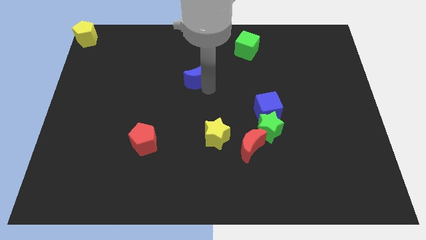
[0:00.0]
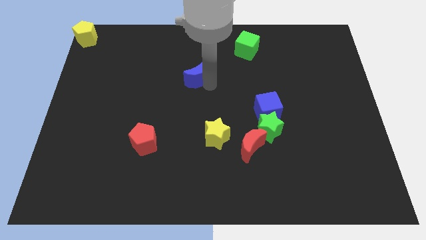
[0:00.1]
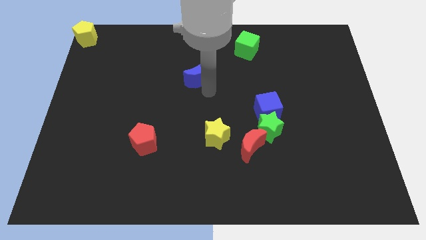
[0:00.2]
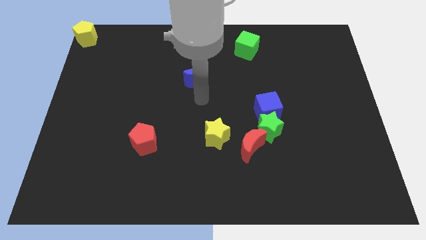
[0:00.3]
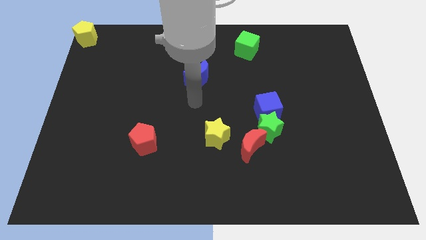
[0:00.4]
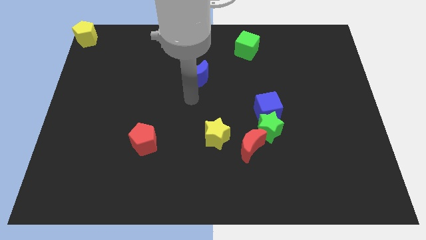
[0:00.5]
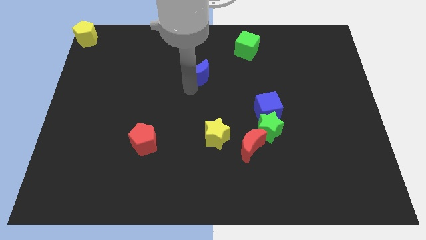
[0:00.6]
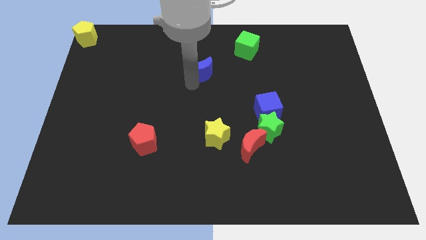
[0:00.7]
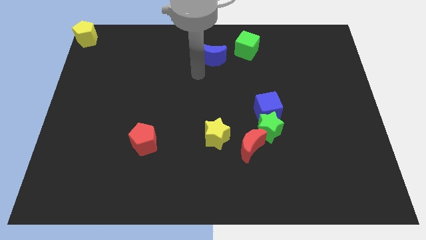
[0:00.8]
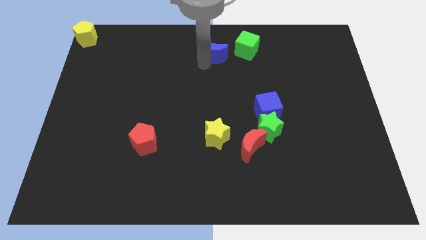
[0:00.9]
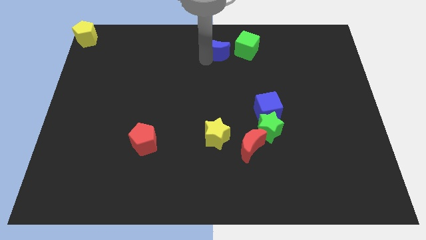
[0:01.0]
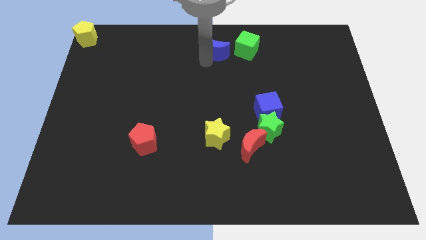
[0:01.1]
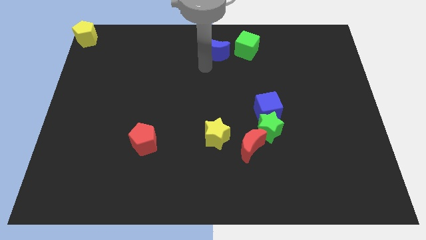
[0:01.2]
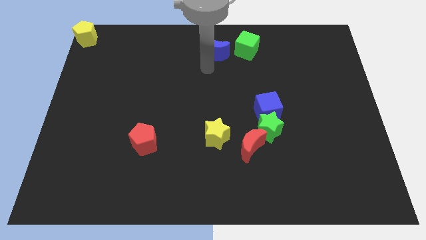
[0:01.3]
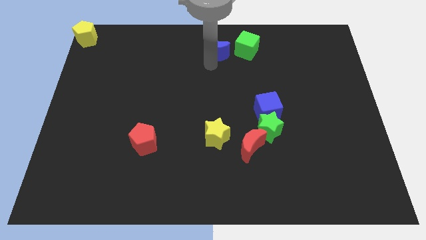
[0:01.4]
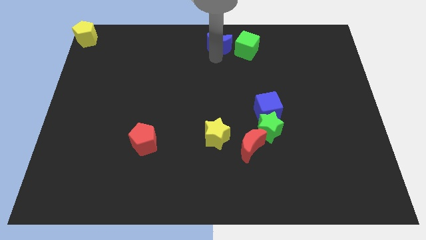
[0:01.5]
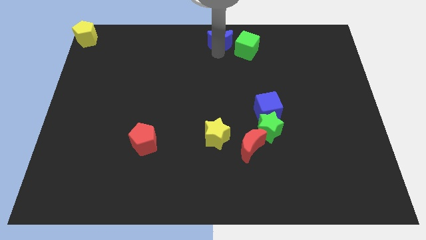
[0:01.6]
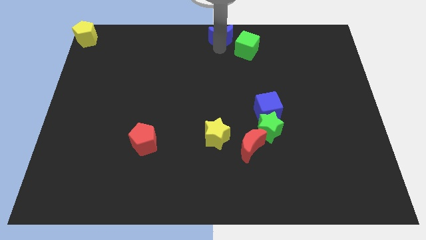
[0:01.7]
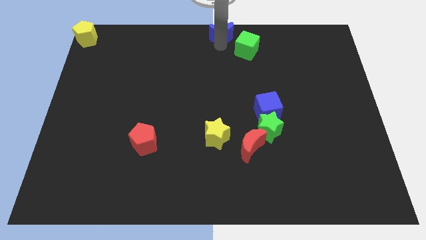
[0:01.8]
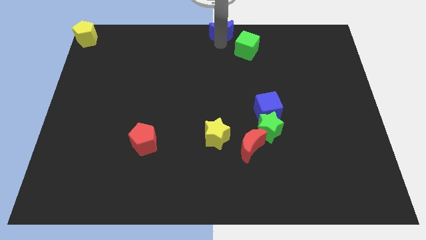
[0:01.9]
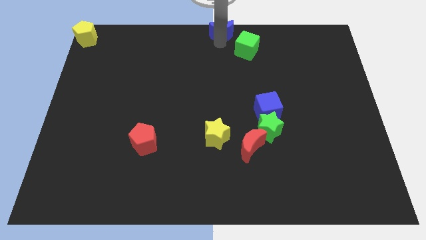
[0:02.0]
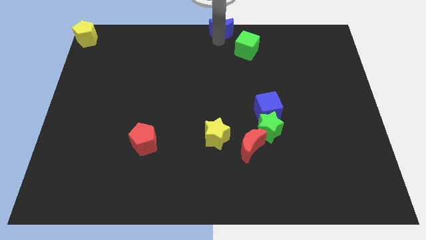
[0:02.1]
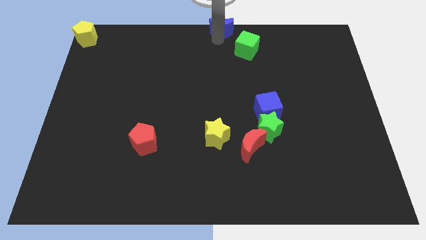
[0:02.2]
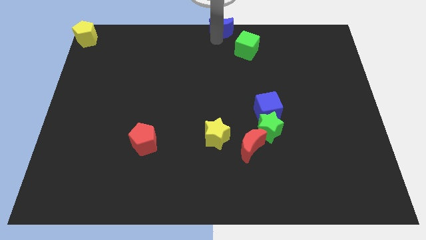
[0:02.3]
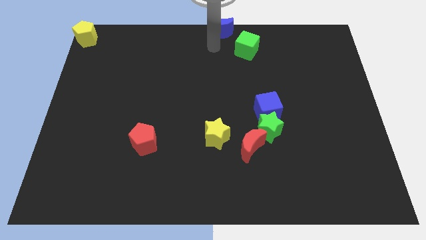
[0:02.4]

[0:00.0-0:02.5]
push the blue moon to the top center of the board

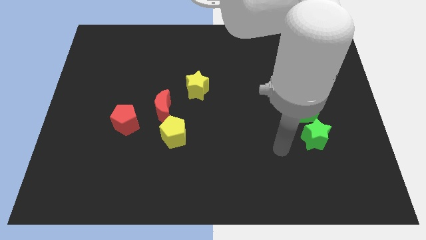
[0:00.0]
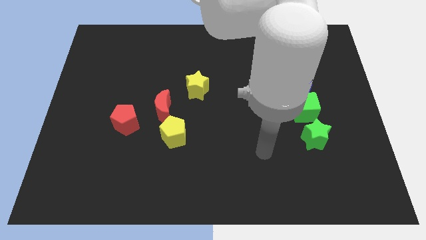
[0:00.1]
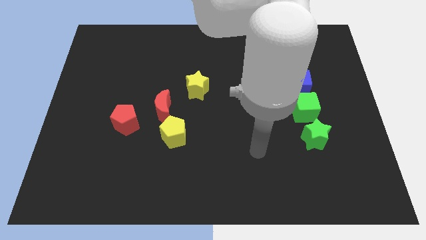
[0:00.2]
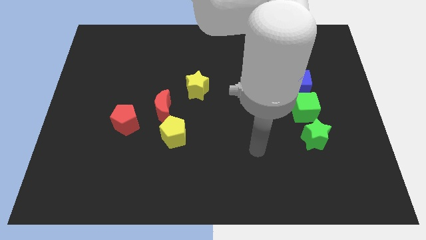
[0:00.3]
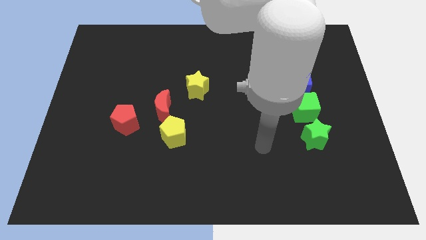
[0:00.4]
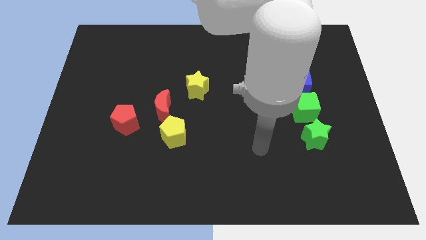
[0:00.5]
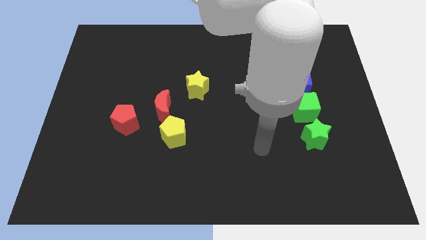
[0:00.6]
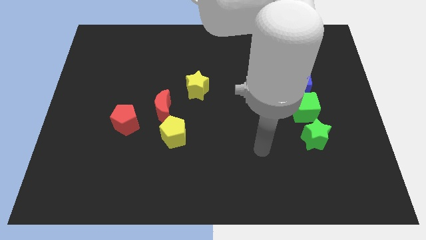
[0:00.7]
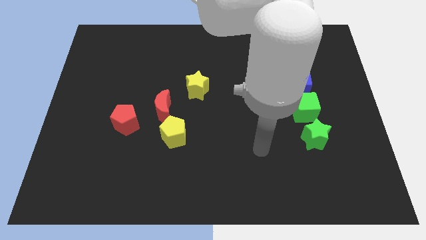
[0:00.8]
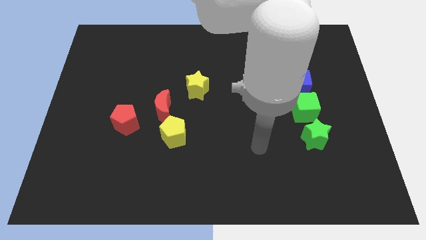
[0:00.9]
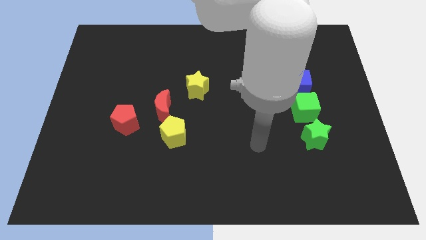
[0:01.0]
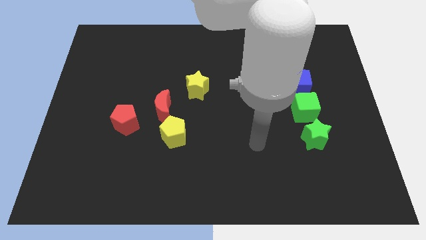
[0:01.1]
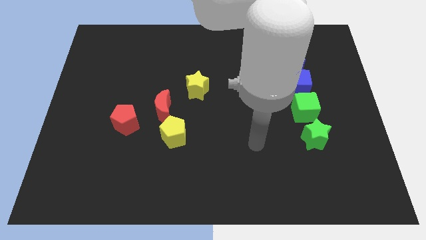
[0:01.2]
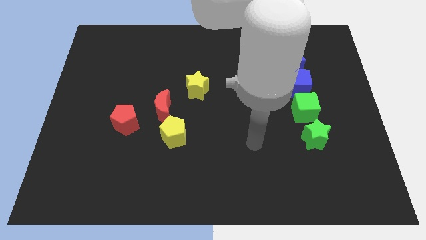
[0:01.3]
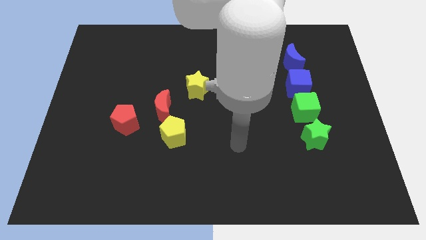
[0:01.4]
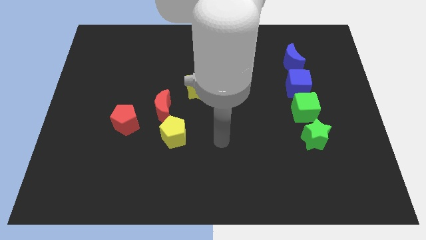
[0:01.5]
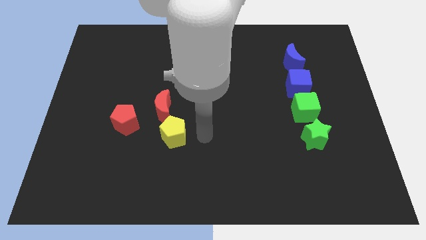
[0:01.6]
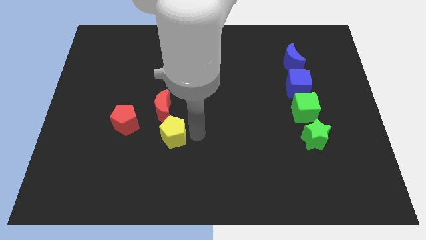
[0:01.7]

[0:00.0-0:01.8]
move your arm towards the yellow pentagon

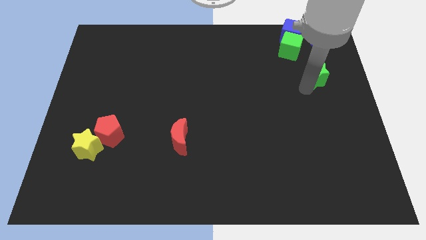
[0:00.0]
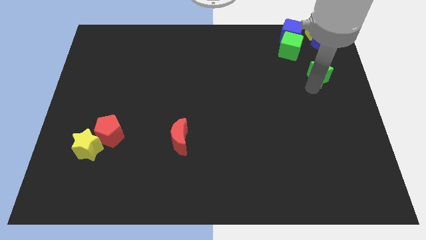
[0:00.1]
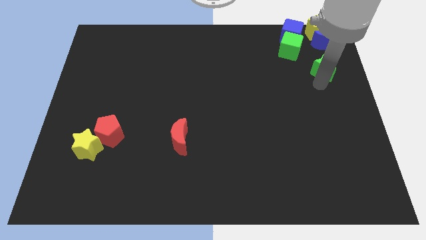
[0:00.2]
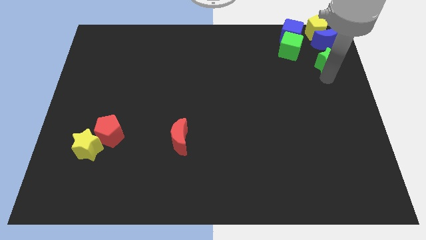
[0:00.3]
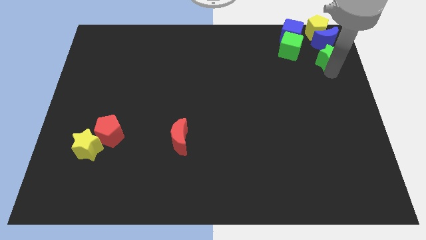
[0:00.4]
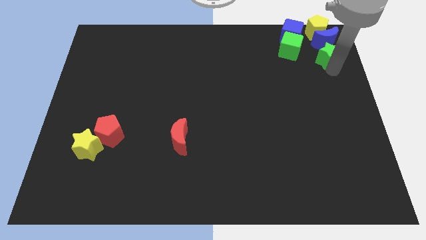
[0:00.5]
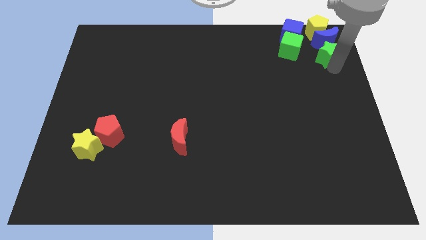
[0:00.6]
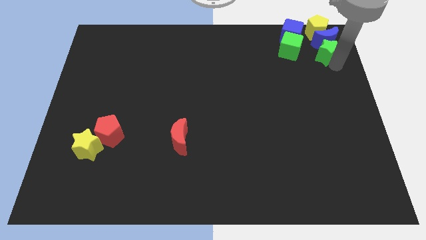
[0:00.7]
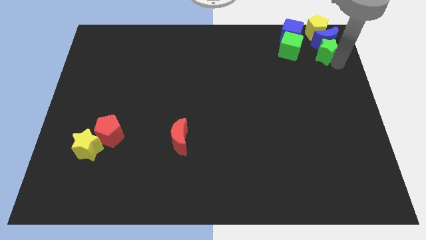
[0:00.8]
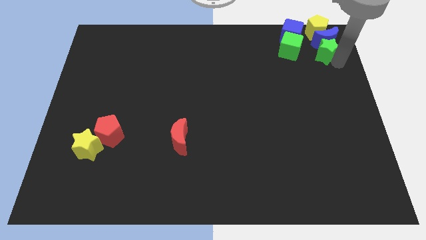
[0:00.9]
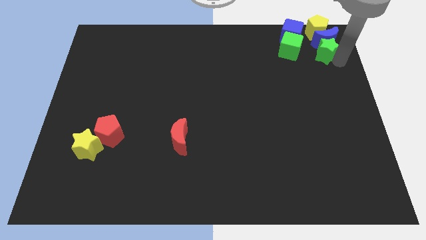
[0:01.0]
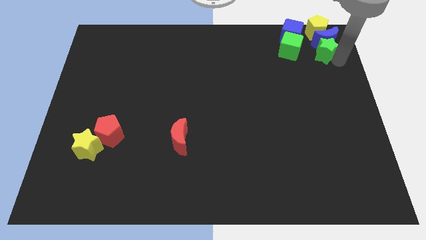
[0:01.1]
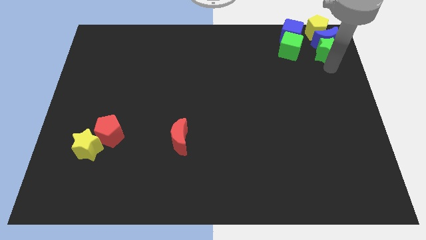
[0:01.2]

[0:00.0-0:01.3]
move the green star below the blue crescent

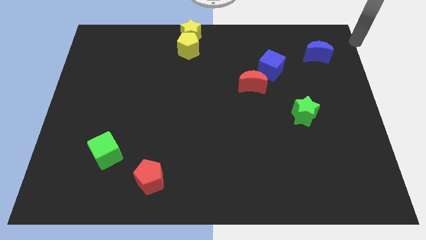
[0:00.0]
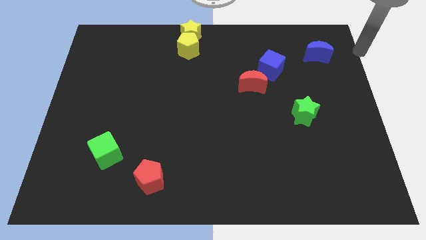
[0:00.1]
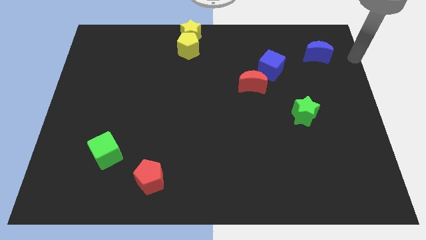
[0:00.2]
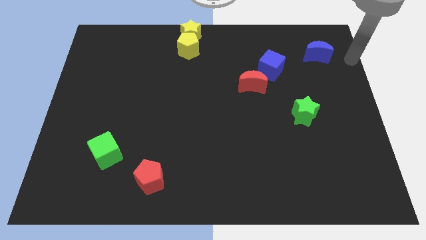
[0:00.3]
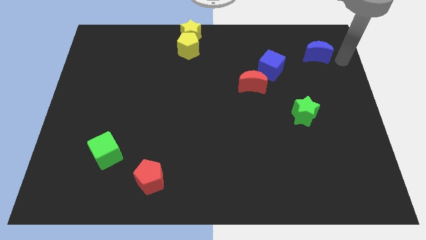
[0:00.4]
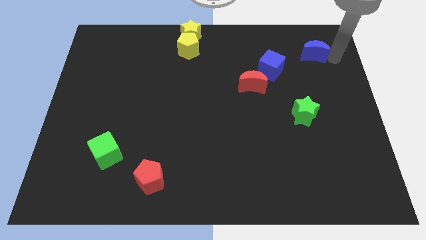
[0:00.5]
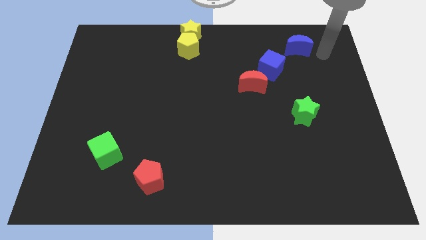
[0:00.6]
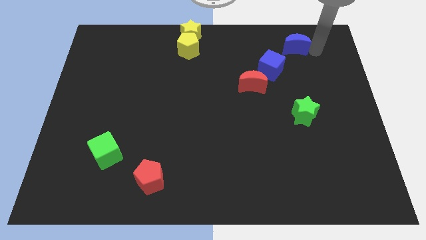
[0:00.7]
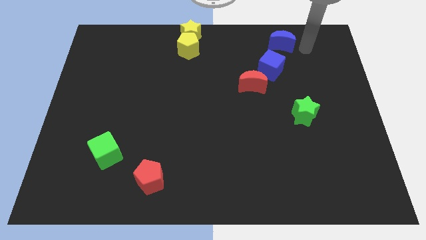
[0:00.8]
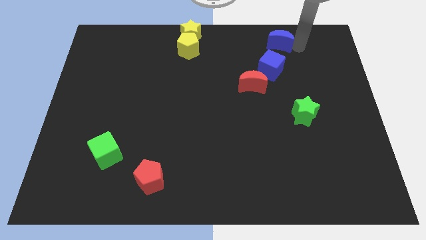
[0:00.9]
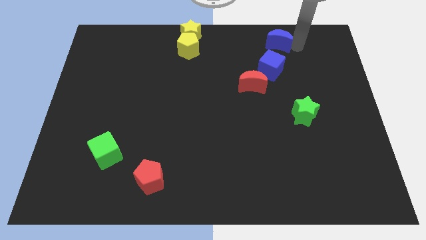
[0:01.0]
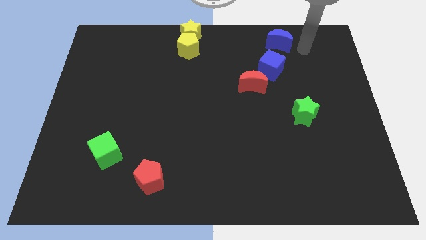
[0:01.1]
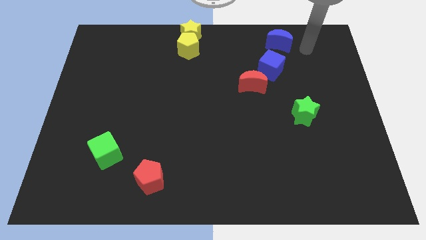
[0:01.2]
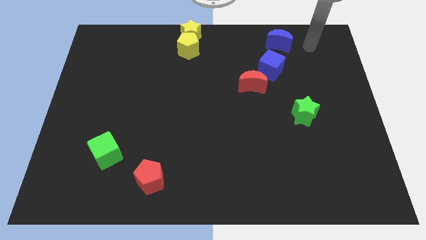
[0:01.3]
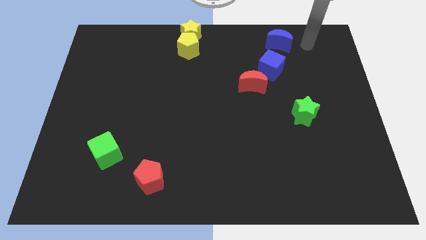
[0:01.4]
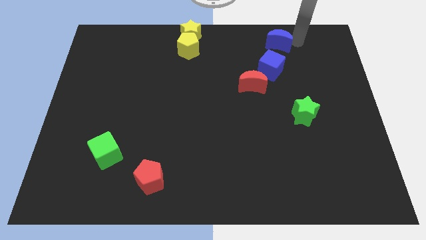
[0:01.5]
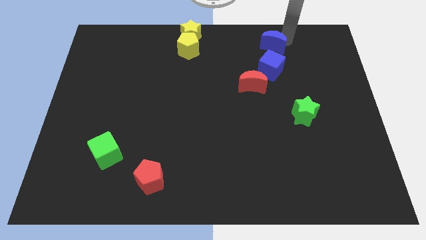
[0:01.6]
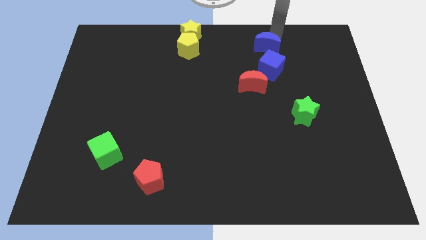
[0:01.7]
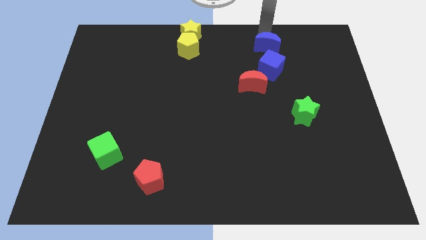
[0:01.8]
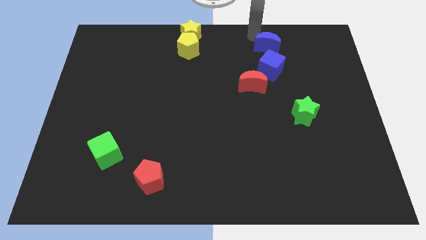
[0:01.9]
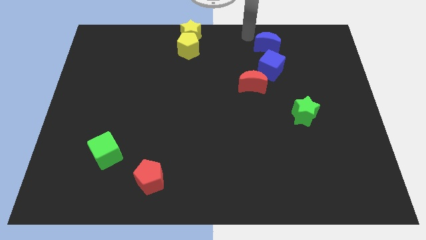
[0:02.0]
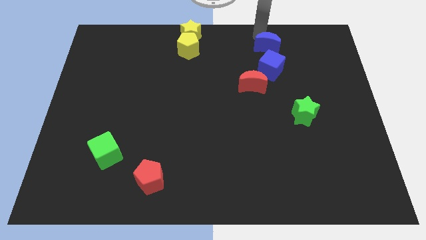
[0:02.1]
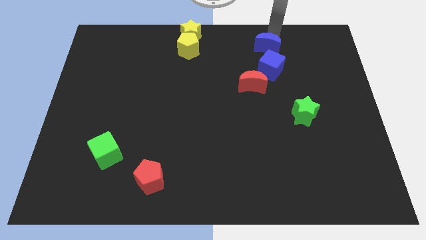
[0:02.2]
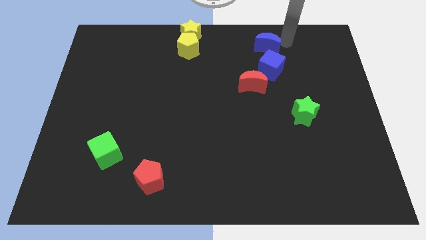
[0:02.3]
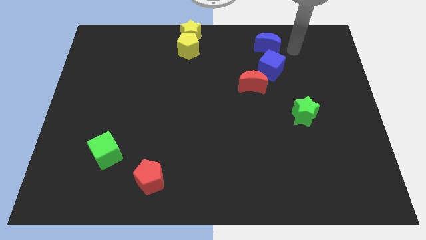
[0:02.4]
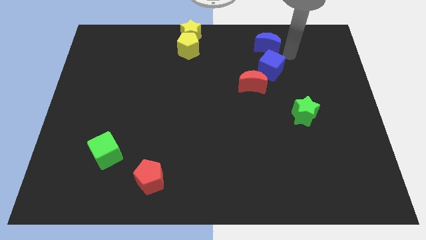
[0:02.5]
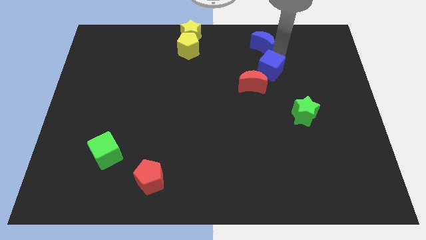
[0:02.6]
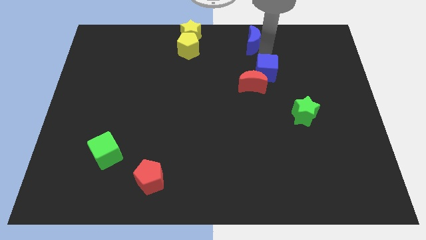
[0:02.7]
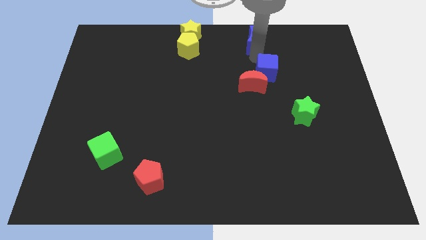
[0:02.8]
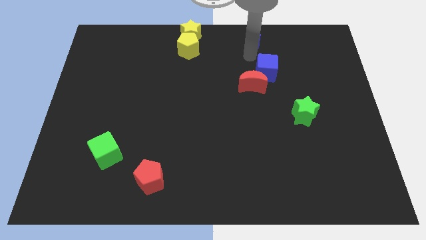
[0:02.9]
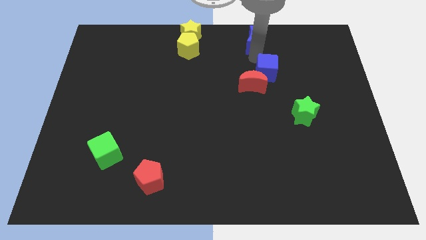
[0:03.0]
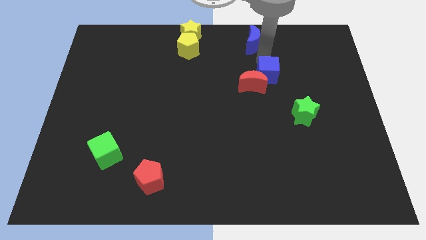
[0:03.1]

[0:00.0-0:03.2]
point your arm in between blue cube and blue moon

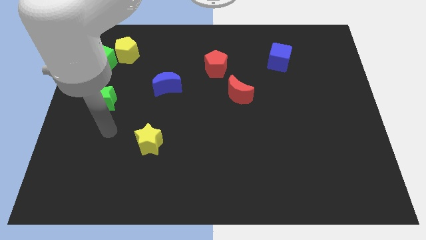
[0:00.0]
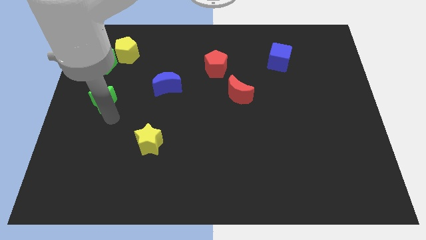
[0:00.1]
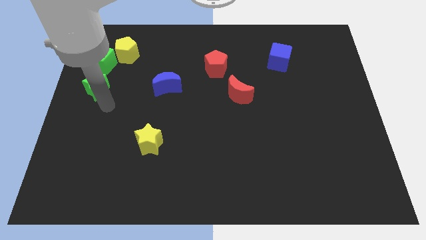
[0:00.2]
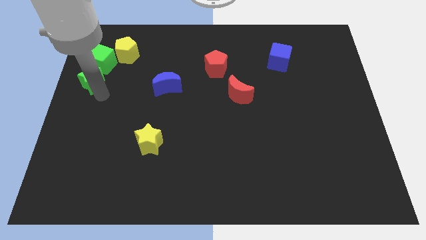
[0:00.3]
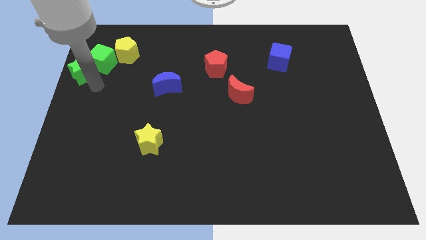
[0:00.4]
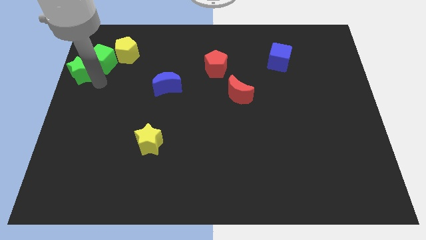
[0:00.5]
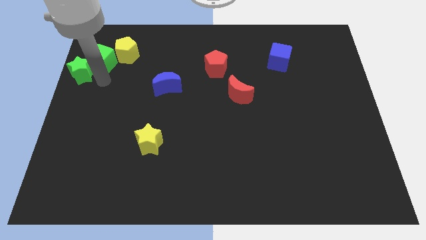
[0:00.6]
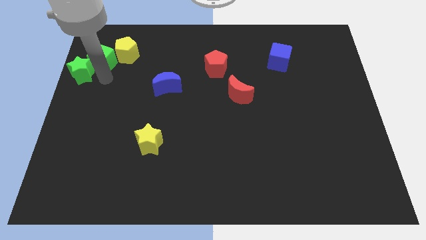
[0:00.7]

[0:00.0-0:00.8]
push the green star towards the left side of the board
